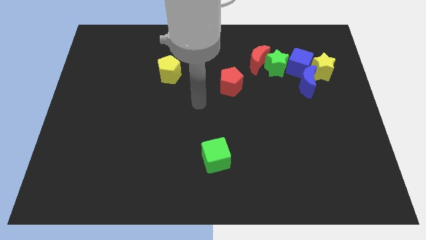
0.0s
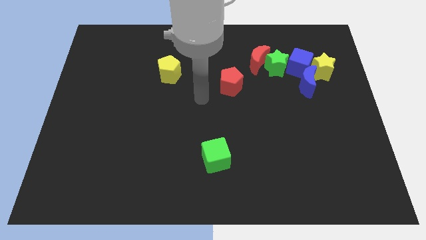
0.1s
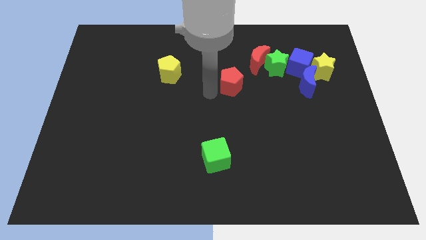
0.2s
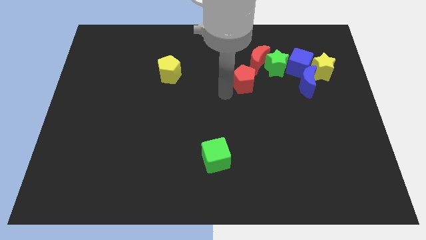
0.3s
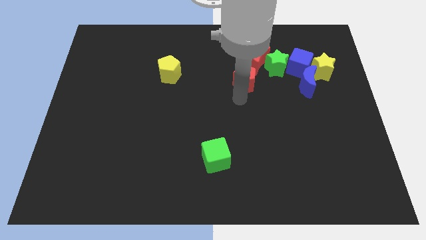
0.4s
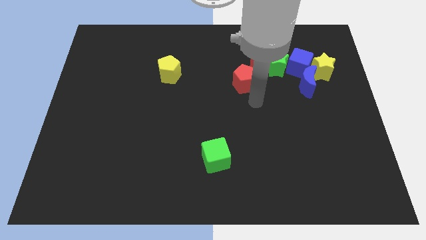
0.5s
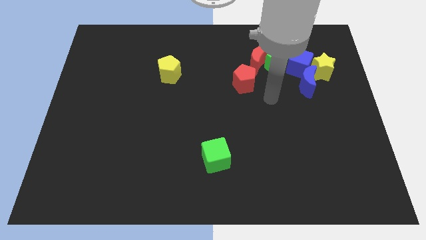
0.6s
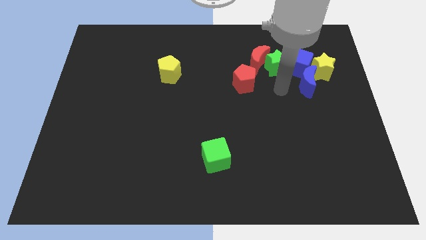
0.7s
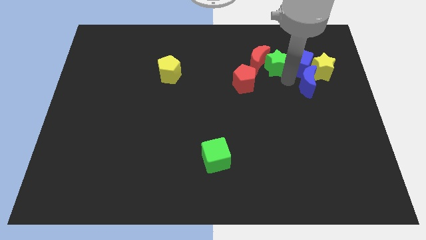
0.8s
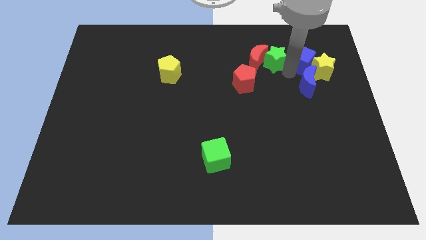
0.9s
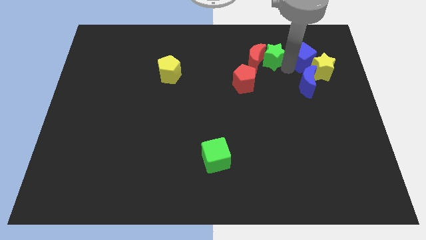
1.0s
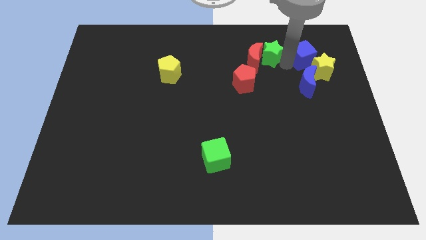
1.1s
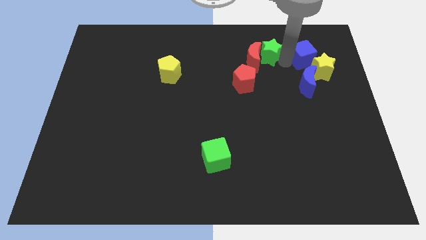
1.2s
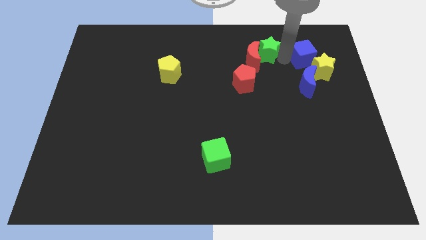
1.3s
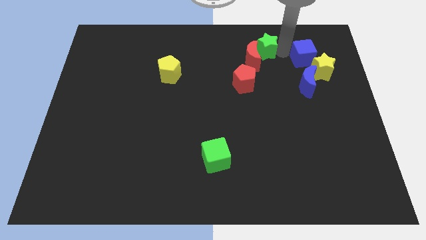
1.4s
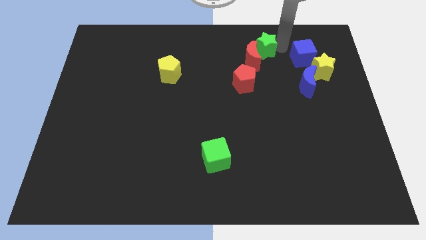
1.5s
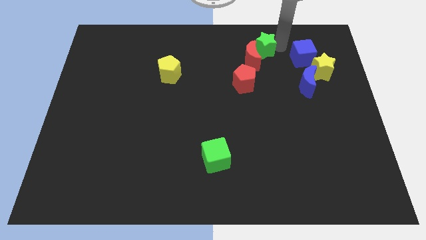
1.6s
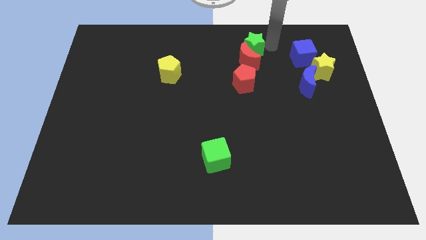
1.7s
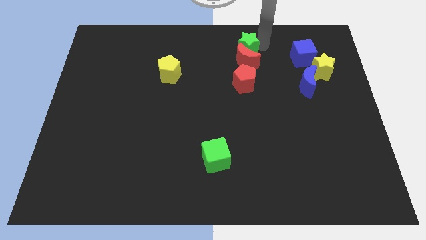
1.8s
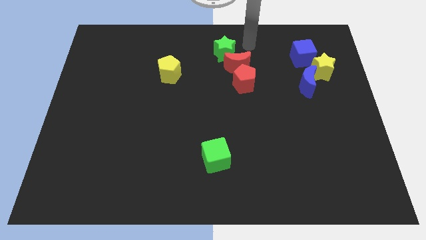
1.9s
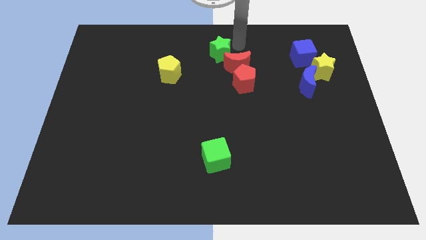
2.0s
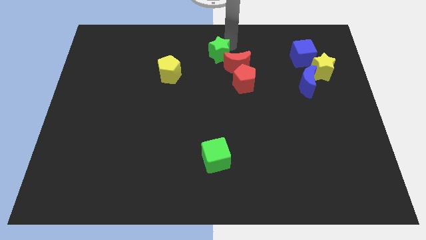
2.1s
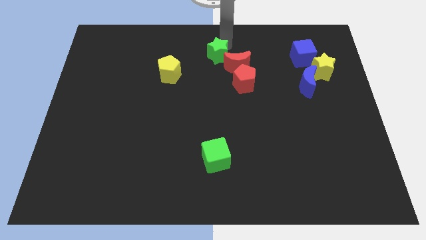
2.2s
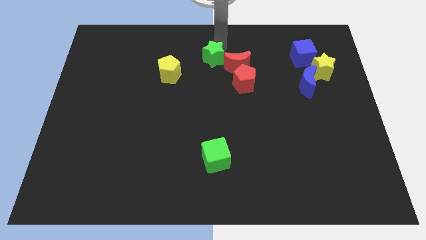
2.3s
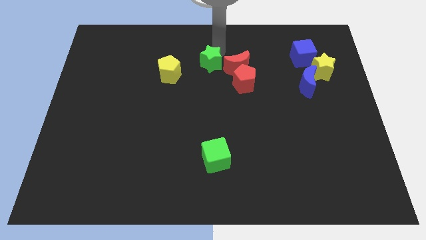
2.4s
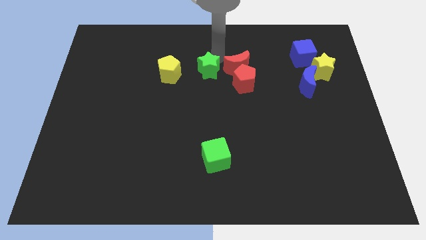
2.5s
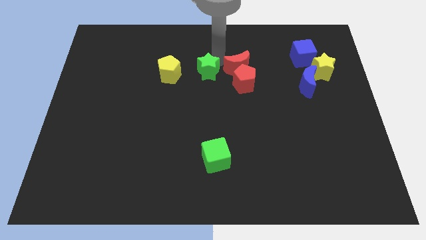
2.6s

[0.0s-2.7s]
place green star above green cube

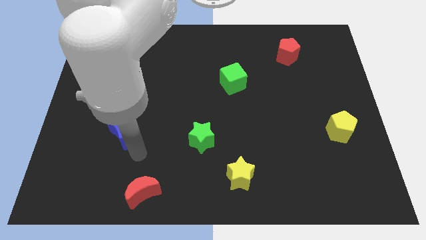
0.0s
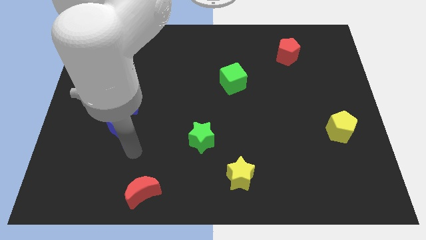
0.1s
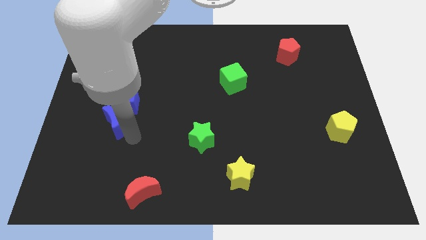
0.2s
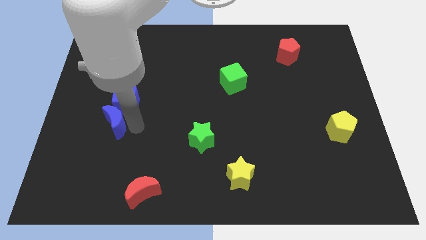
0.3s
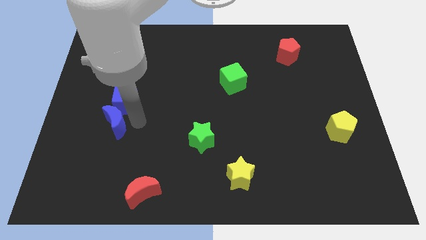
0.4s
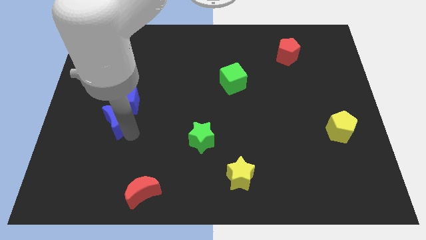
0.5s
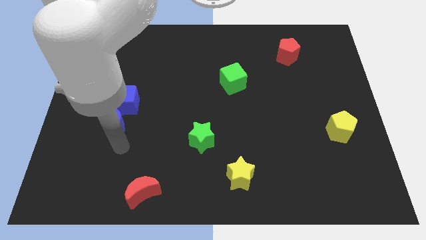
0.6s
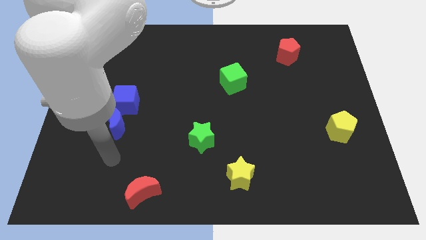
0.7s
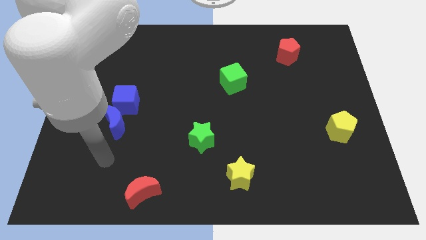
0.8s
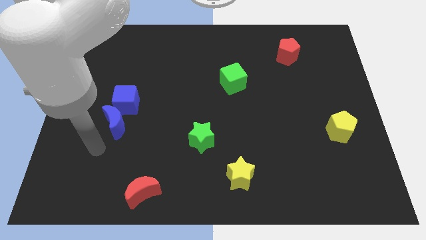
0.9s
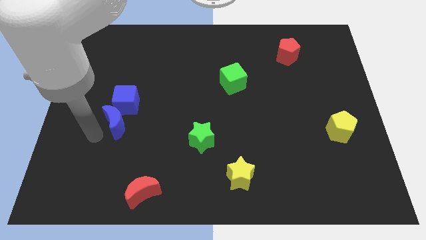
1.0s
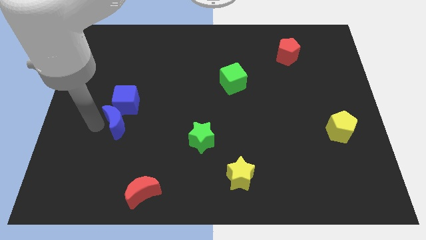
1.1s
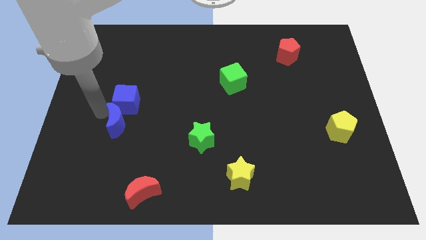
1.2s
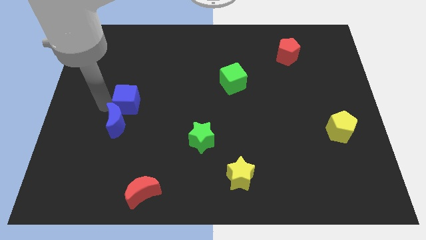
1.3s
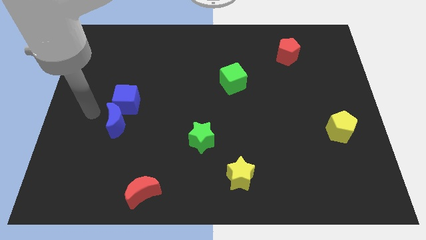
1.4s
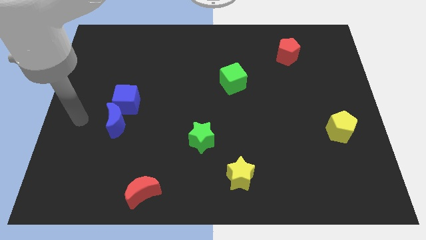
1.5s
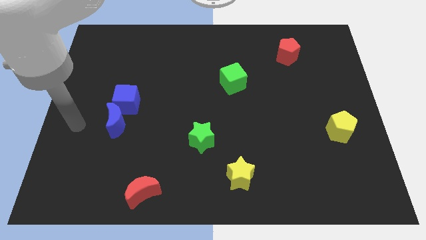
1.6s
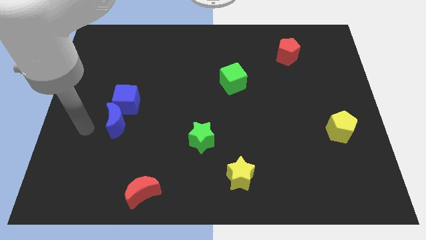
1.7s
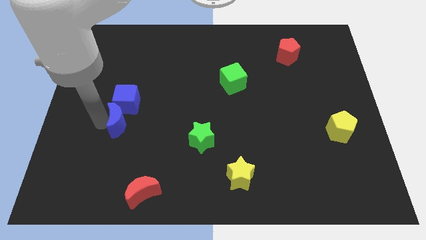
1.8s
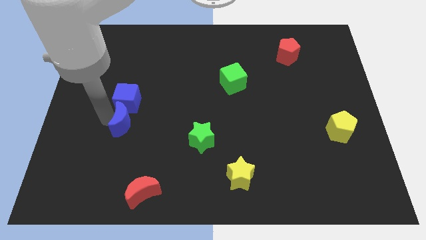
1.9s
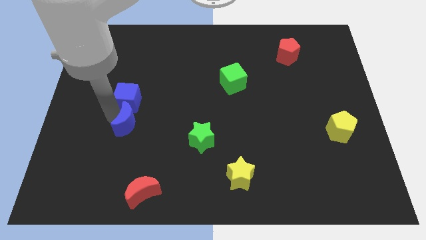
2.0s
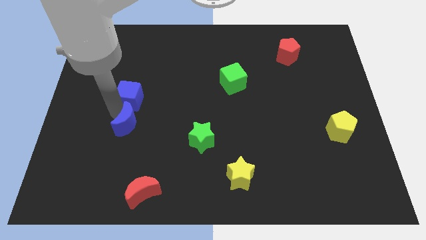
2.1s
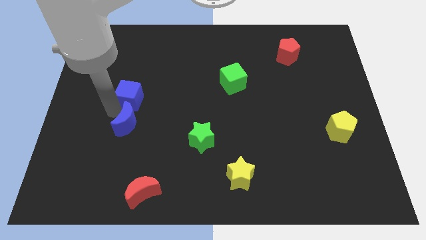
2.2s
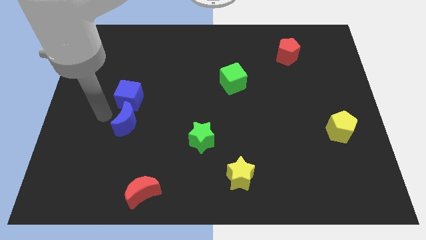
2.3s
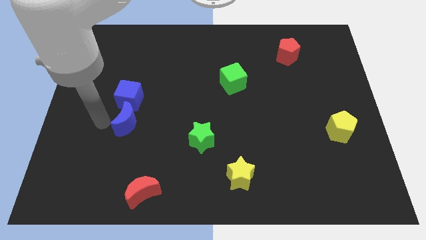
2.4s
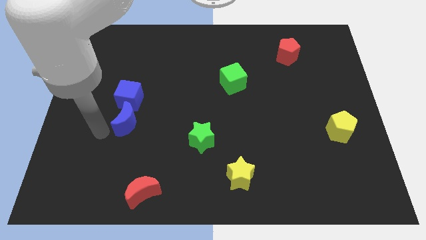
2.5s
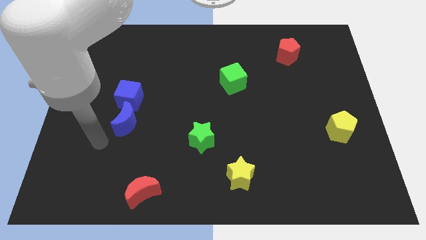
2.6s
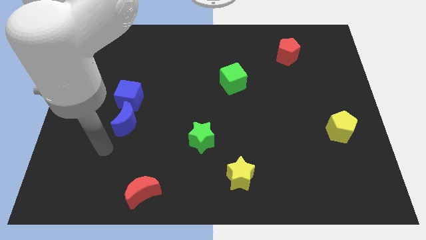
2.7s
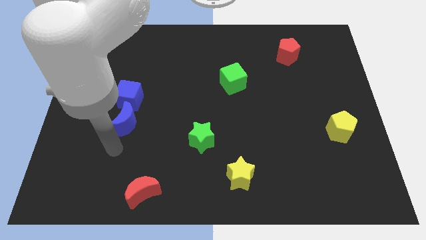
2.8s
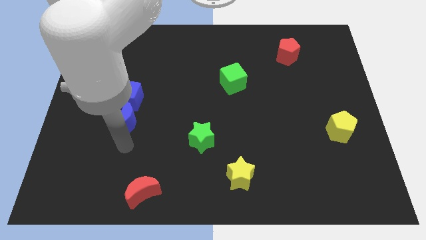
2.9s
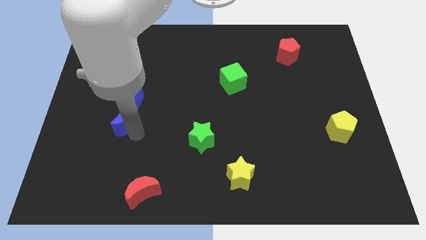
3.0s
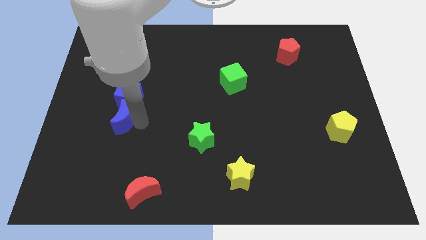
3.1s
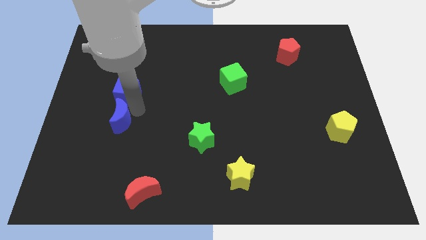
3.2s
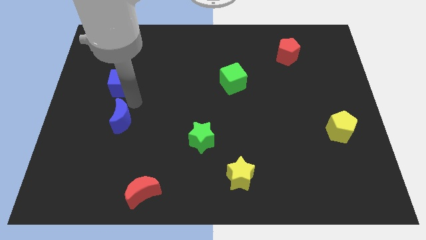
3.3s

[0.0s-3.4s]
place the blue crescent towards the bottom of the blue cube

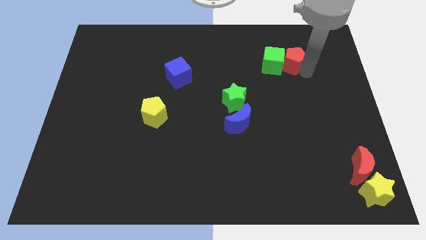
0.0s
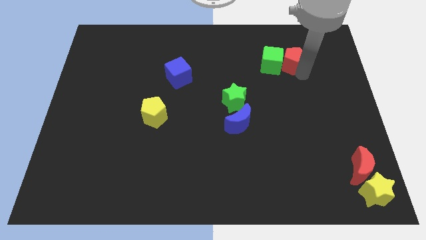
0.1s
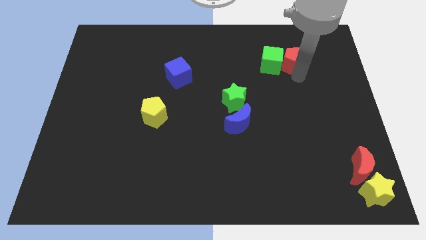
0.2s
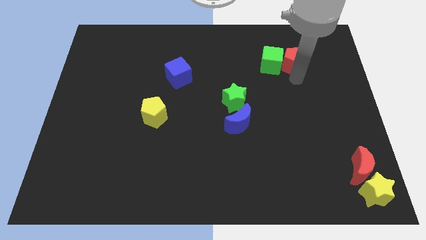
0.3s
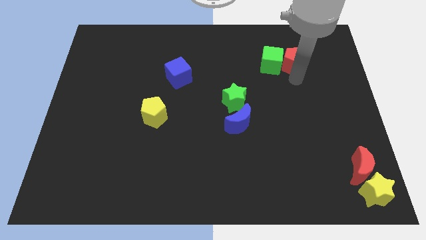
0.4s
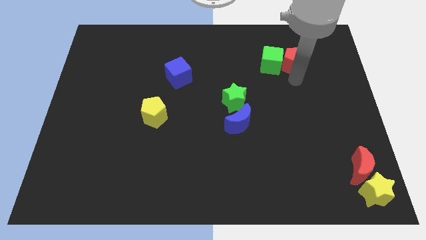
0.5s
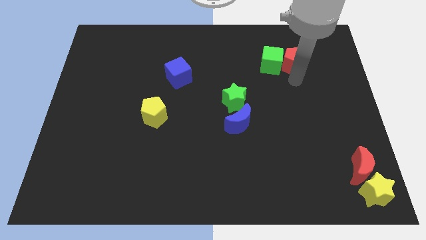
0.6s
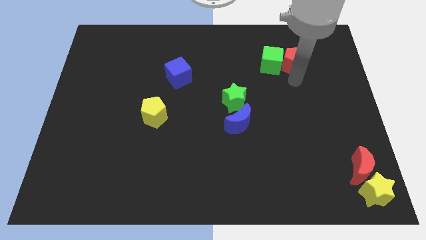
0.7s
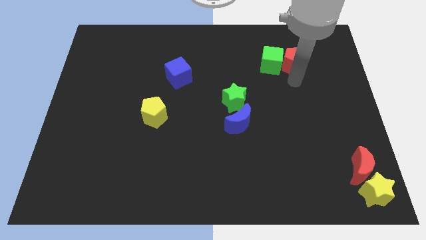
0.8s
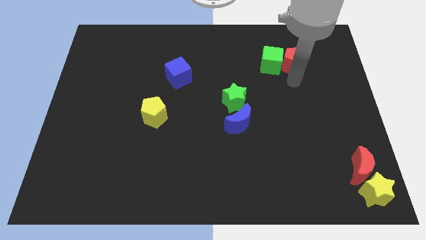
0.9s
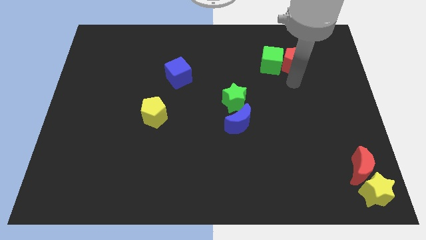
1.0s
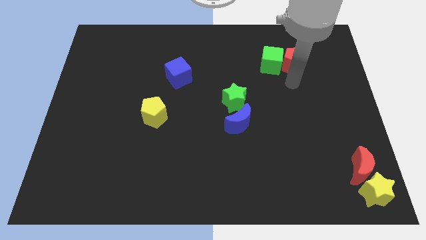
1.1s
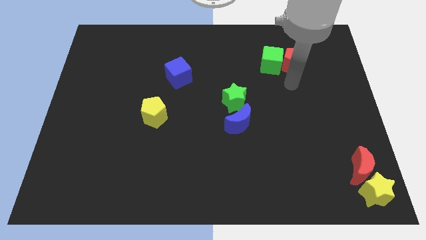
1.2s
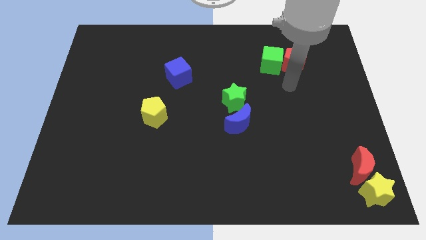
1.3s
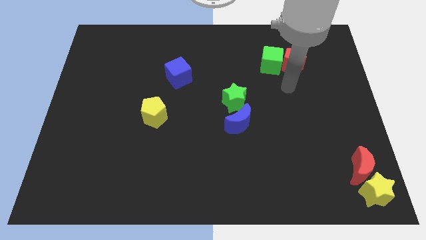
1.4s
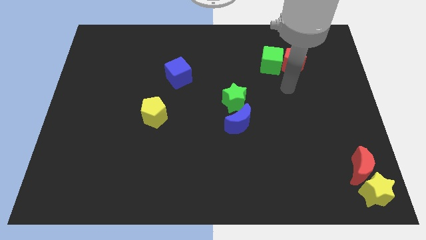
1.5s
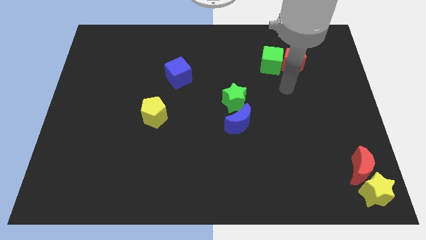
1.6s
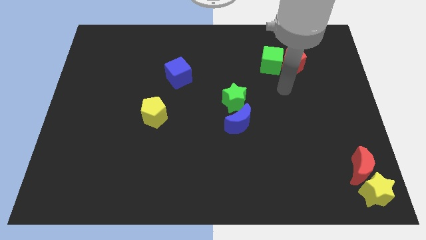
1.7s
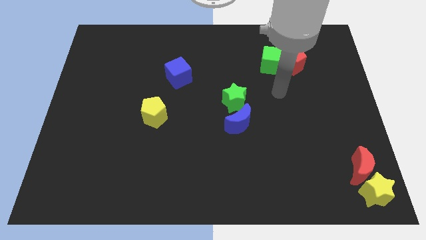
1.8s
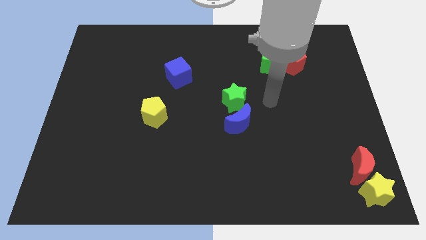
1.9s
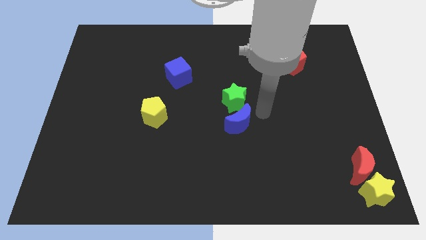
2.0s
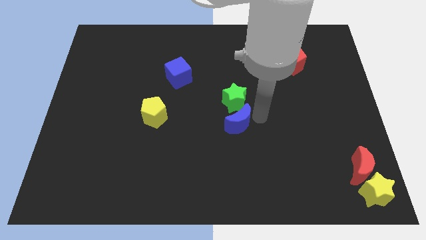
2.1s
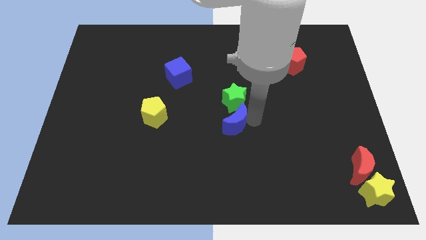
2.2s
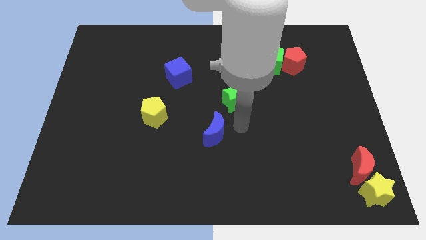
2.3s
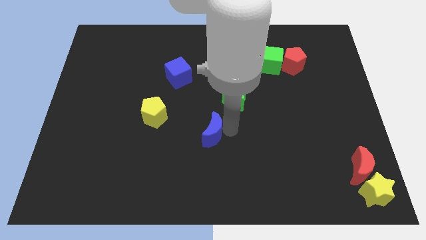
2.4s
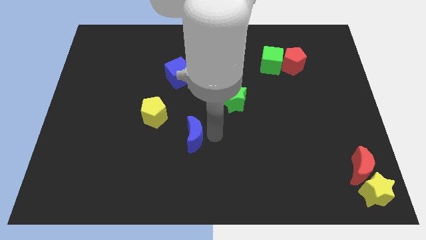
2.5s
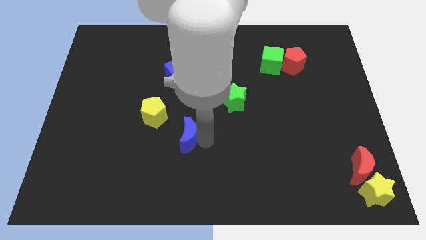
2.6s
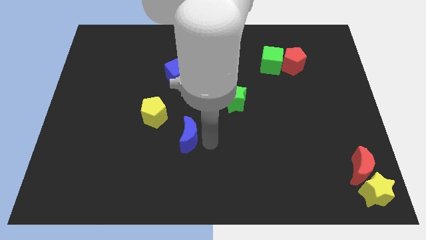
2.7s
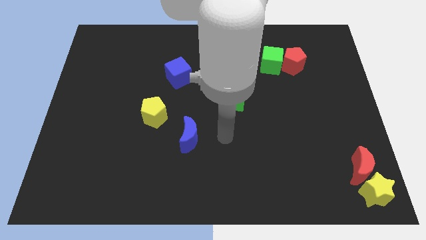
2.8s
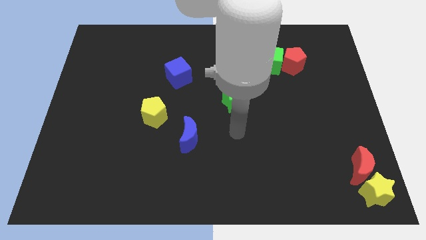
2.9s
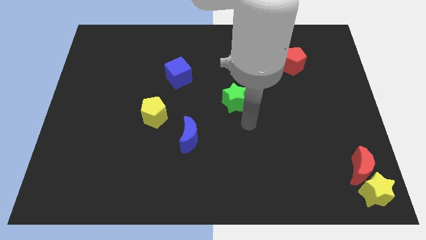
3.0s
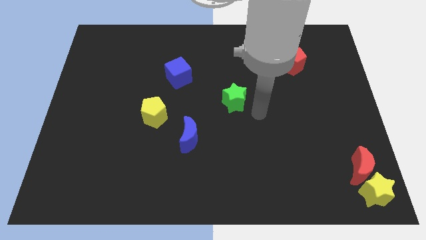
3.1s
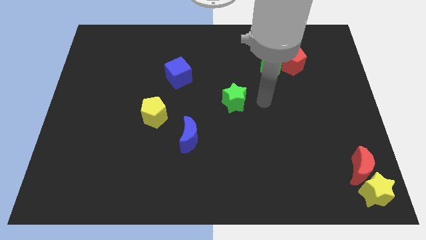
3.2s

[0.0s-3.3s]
push the blue moon vertical to the blue cube
